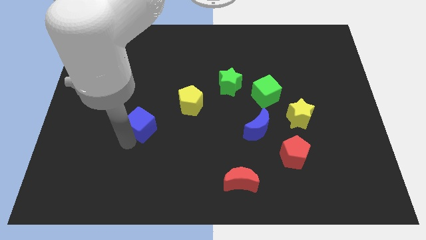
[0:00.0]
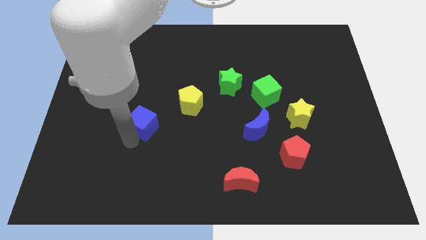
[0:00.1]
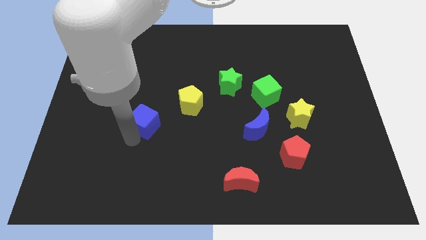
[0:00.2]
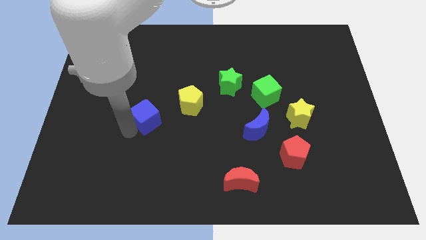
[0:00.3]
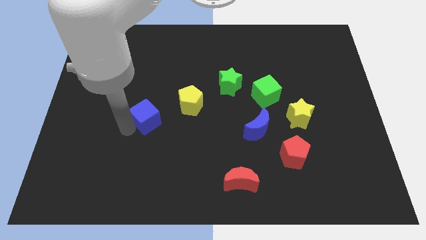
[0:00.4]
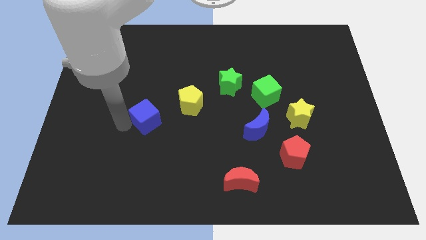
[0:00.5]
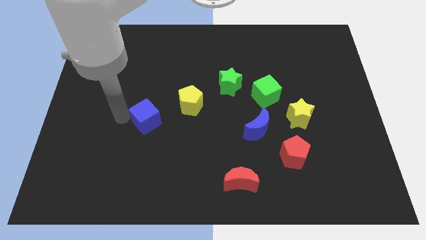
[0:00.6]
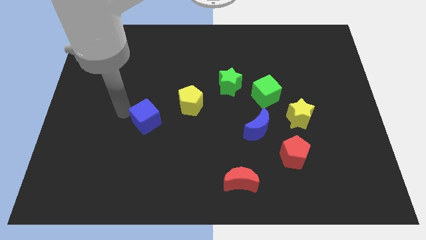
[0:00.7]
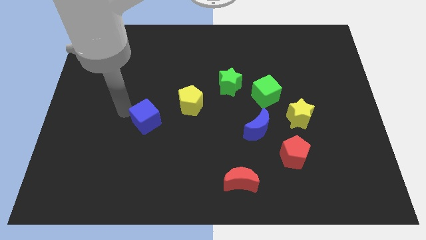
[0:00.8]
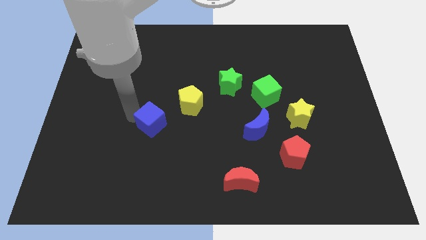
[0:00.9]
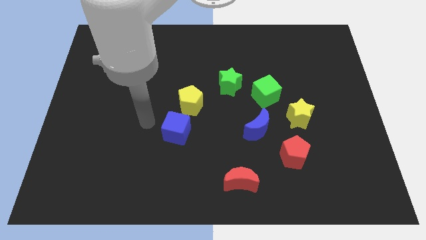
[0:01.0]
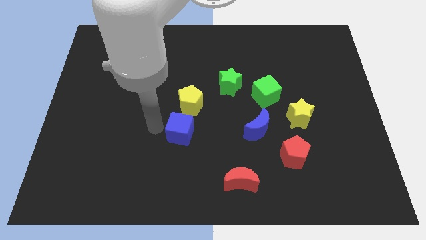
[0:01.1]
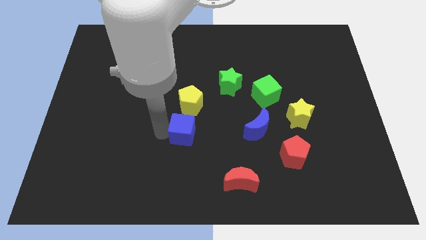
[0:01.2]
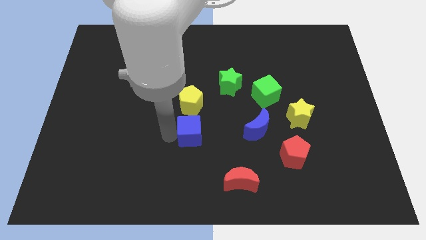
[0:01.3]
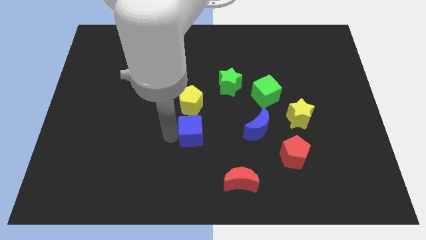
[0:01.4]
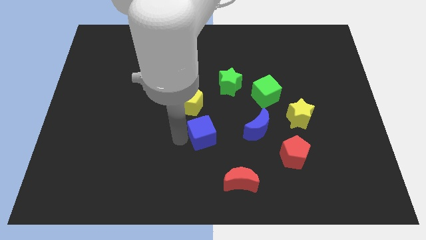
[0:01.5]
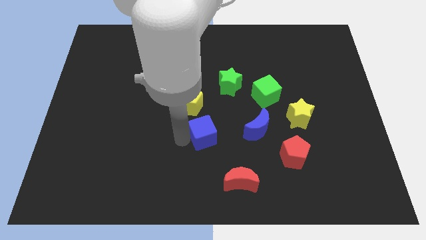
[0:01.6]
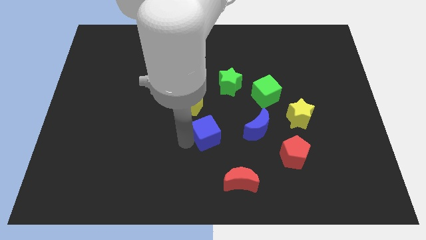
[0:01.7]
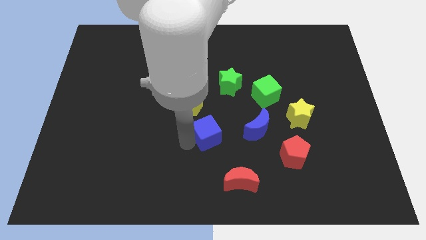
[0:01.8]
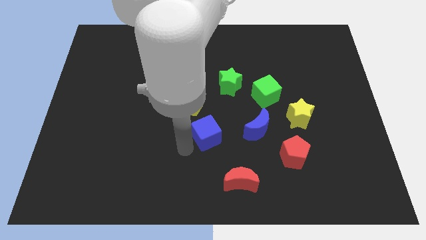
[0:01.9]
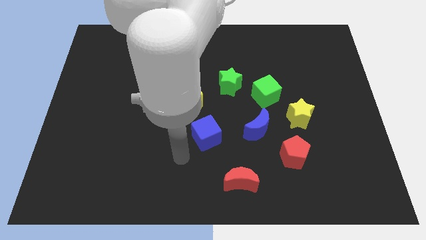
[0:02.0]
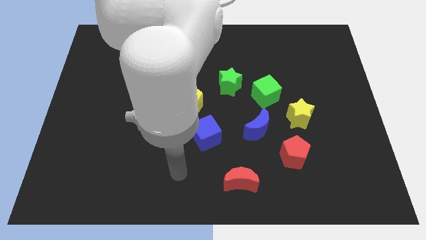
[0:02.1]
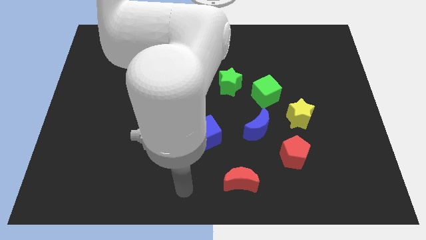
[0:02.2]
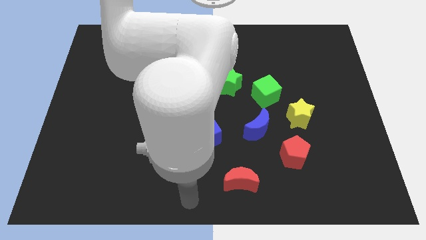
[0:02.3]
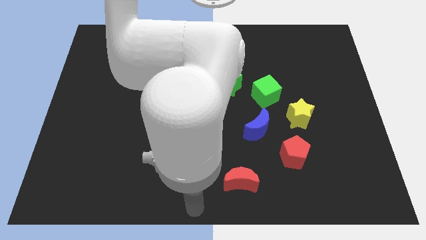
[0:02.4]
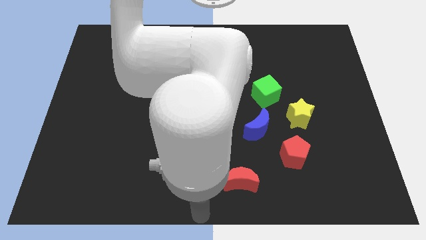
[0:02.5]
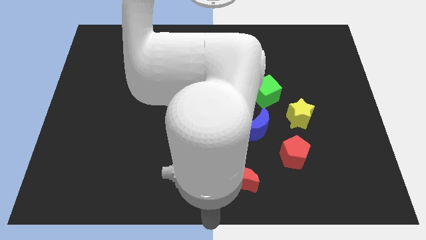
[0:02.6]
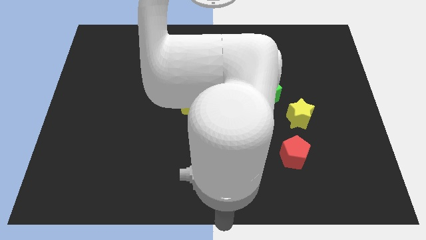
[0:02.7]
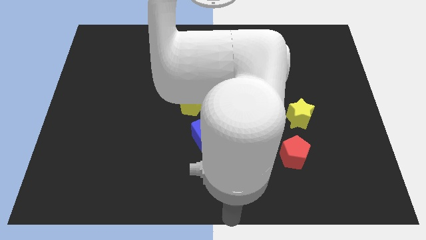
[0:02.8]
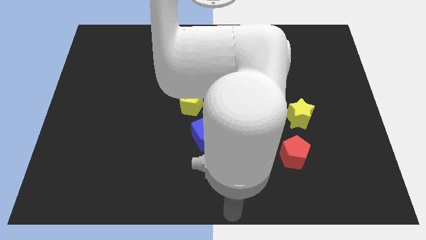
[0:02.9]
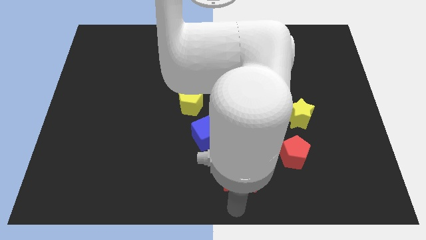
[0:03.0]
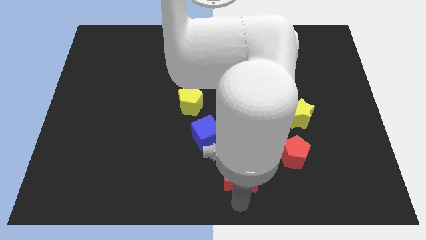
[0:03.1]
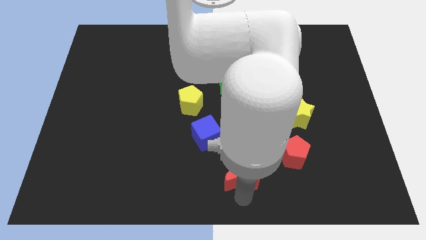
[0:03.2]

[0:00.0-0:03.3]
push the blue cube between the yellow pentagon and red moon

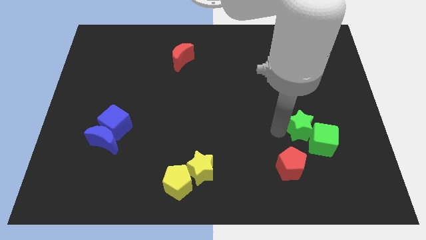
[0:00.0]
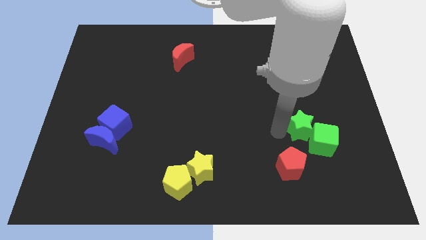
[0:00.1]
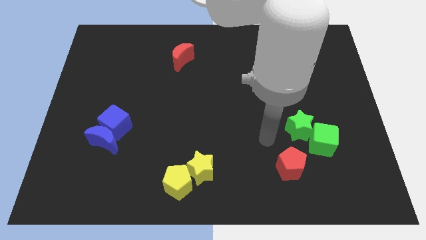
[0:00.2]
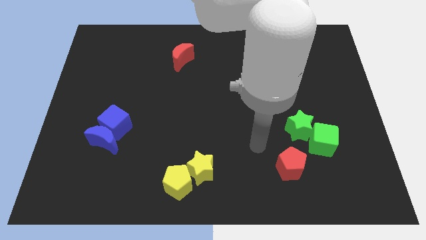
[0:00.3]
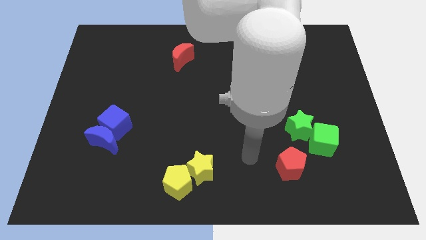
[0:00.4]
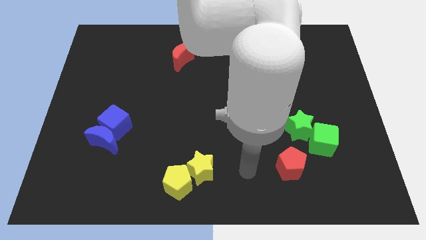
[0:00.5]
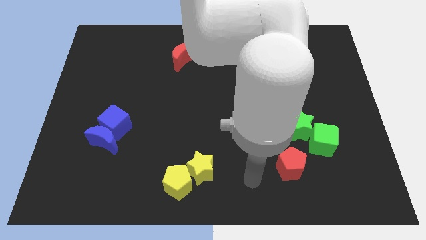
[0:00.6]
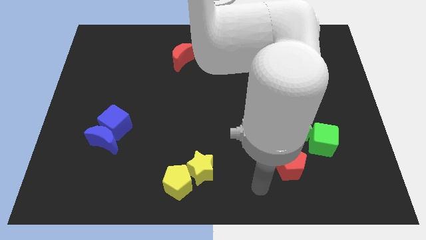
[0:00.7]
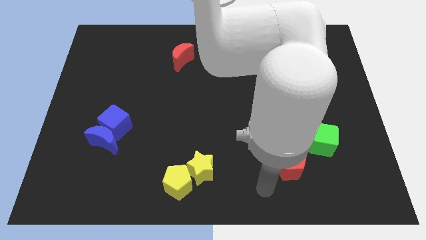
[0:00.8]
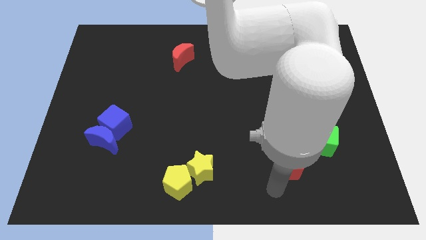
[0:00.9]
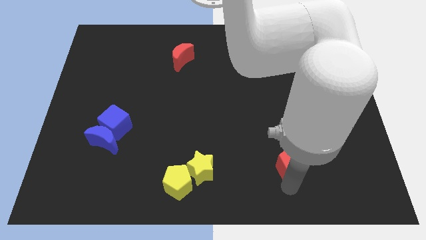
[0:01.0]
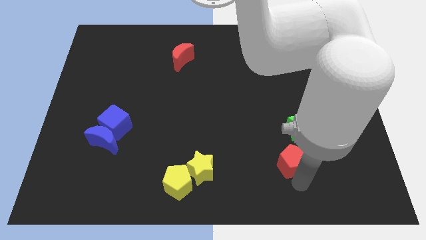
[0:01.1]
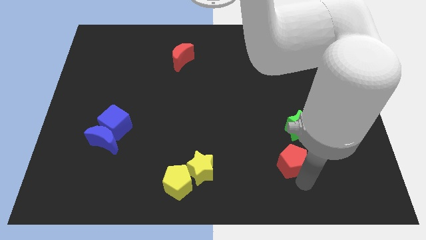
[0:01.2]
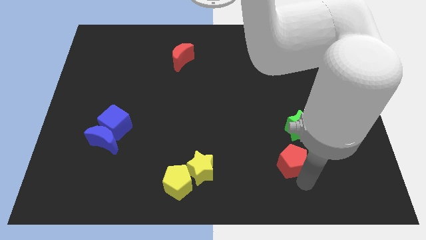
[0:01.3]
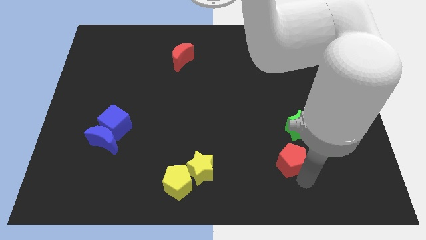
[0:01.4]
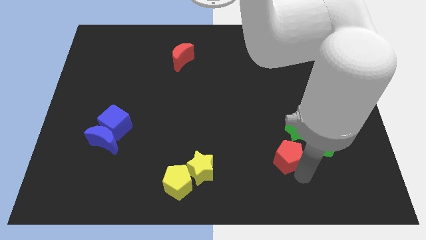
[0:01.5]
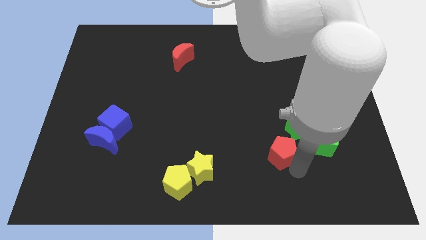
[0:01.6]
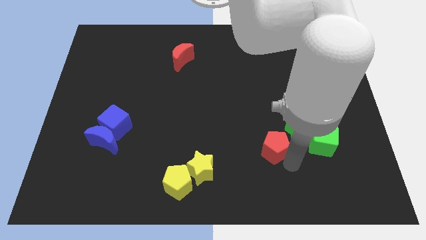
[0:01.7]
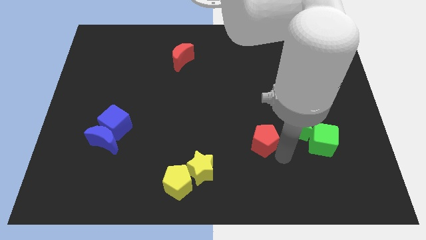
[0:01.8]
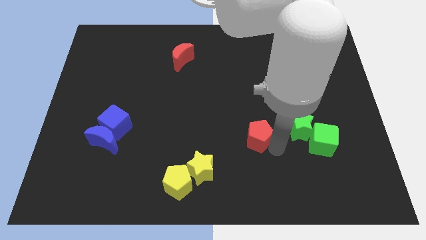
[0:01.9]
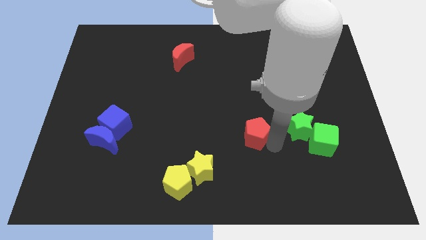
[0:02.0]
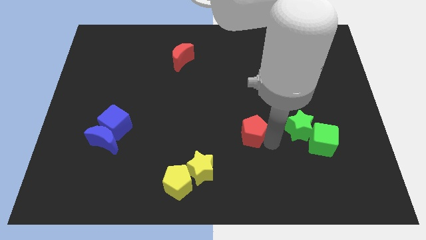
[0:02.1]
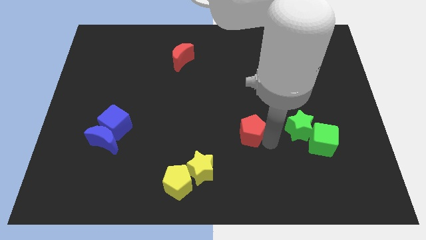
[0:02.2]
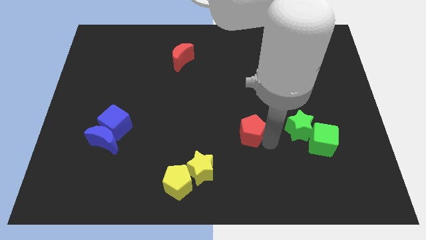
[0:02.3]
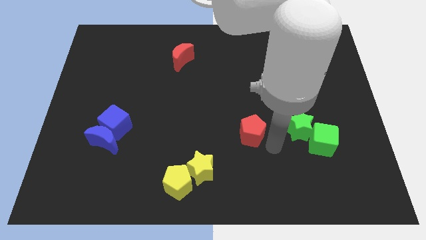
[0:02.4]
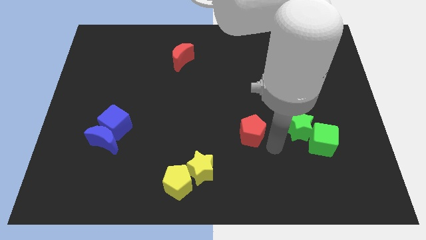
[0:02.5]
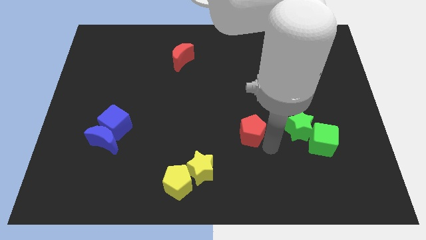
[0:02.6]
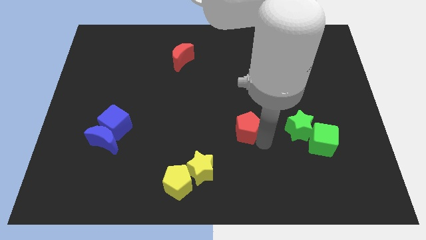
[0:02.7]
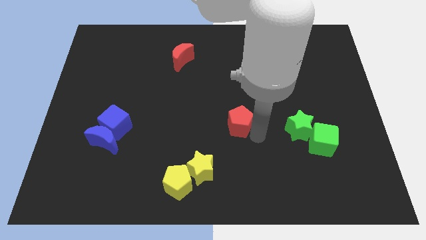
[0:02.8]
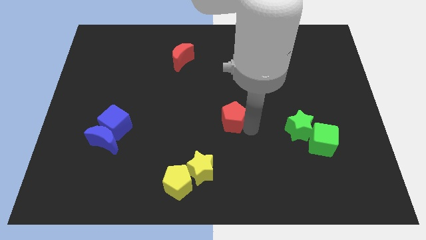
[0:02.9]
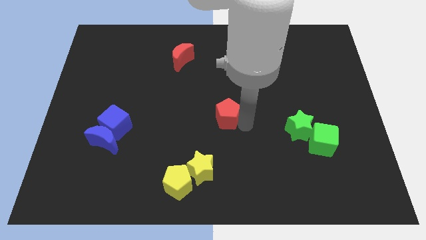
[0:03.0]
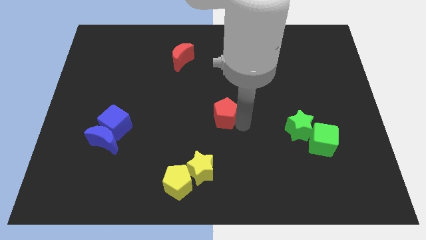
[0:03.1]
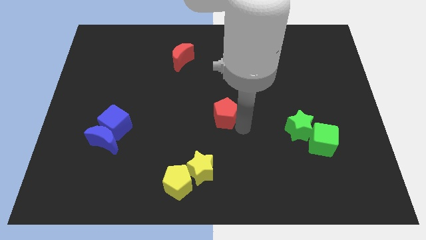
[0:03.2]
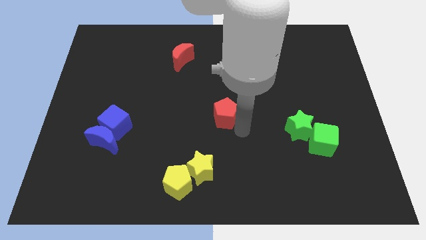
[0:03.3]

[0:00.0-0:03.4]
place the red pentagon at the center of the board

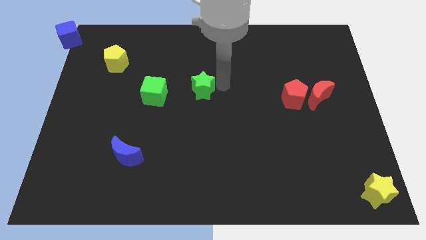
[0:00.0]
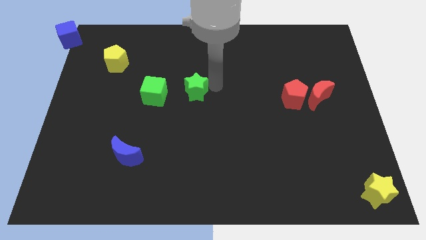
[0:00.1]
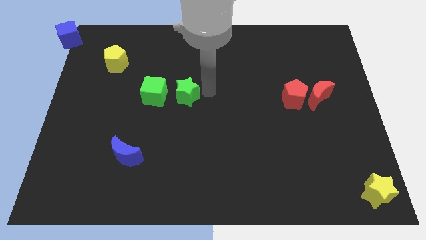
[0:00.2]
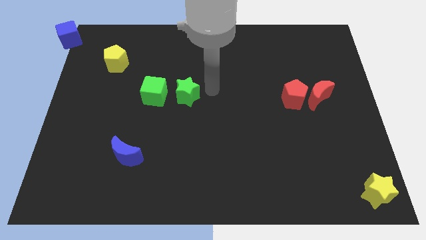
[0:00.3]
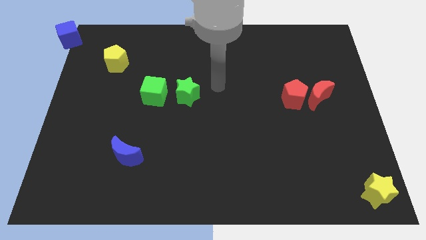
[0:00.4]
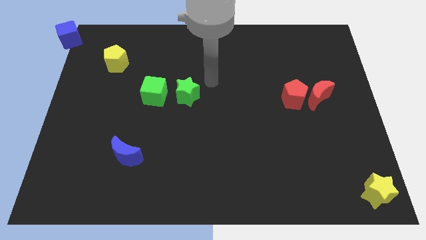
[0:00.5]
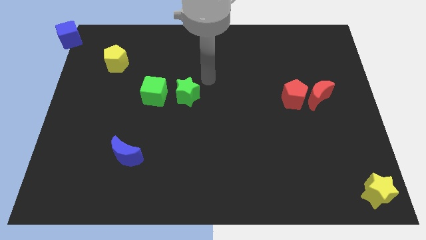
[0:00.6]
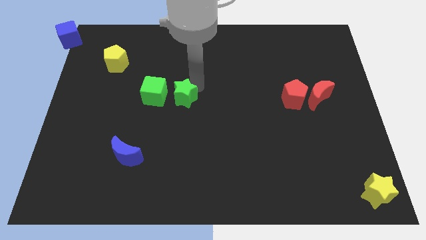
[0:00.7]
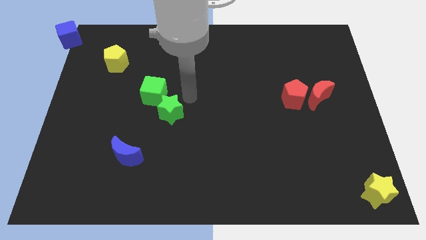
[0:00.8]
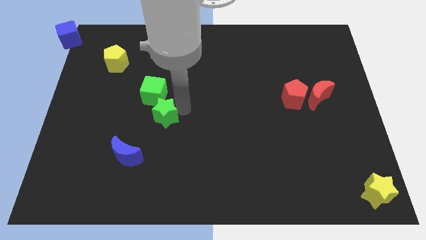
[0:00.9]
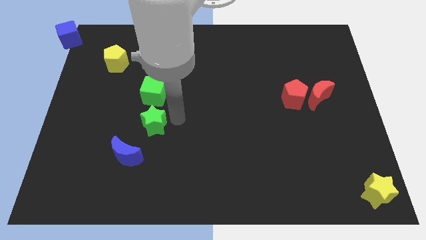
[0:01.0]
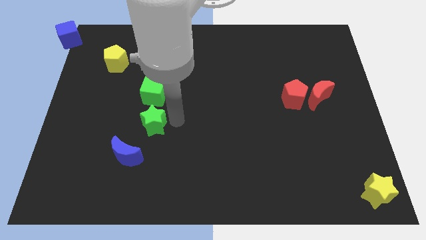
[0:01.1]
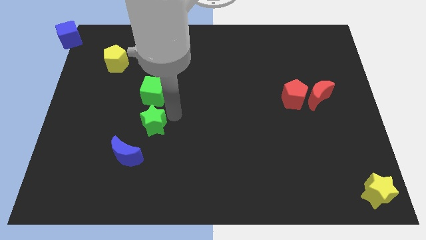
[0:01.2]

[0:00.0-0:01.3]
place the green star below the green cube

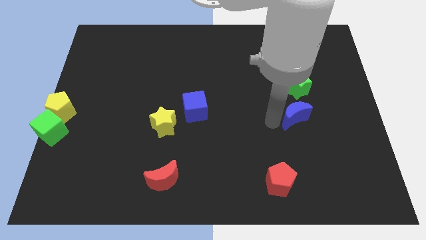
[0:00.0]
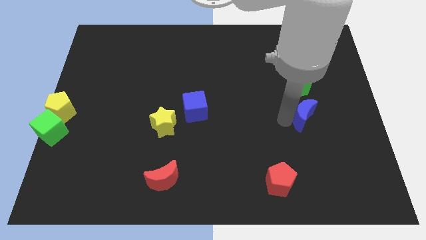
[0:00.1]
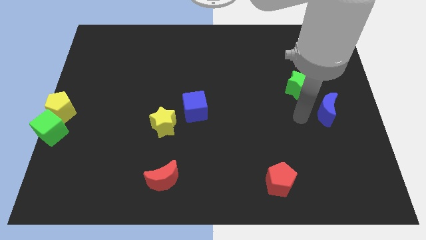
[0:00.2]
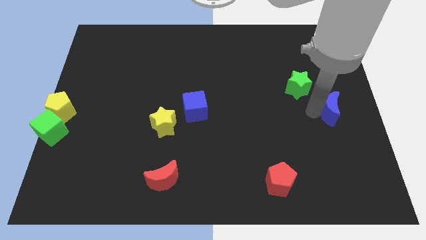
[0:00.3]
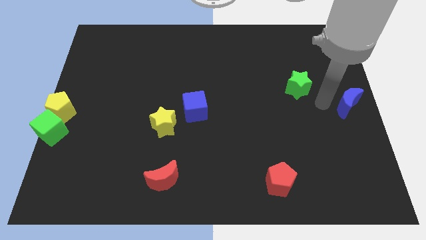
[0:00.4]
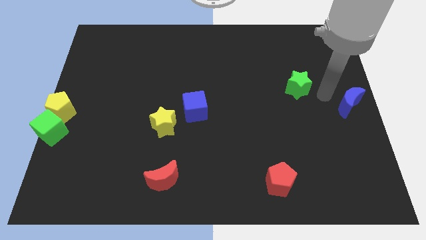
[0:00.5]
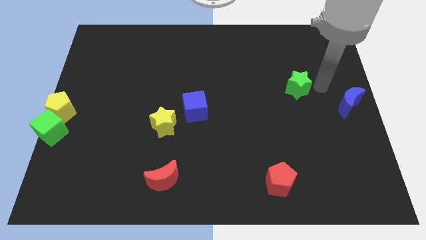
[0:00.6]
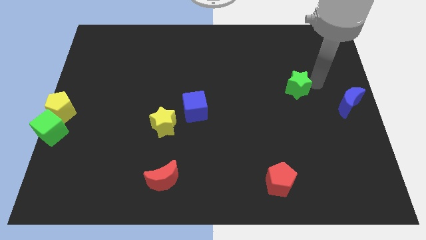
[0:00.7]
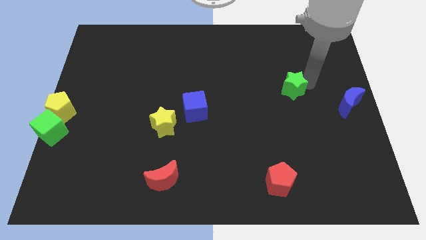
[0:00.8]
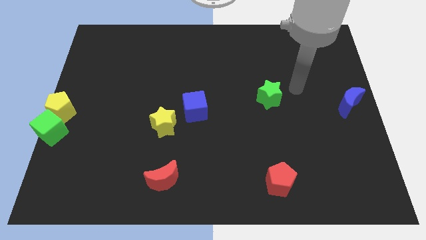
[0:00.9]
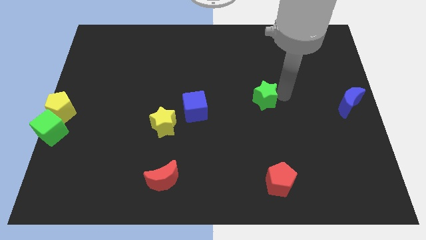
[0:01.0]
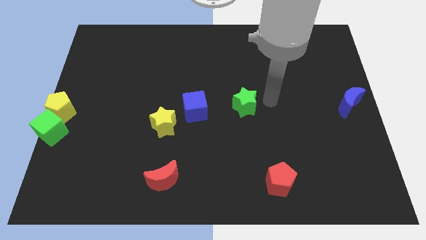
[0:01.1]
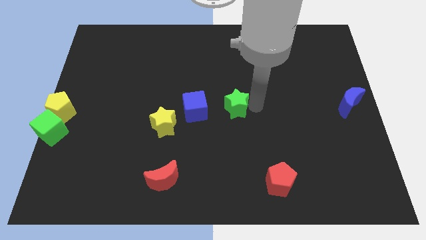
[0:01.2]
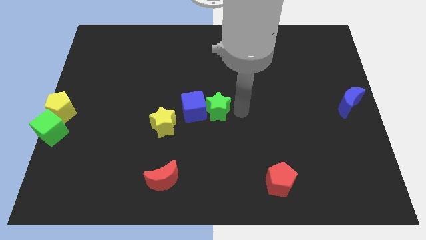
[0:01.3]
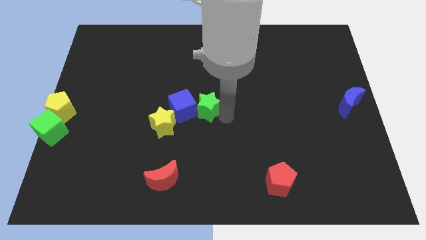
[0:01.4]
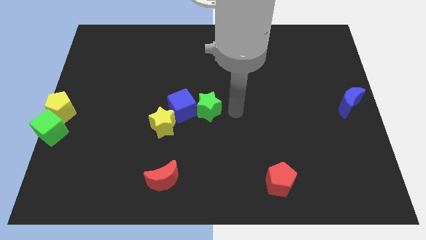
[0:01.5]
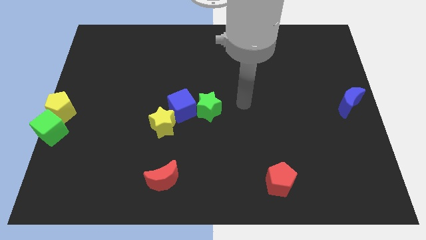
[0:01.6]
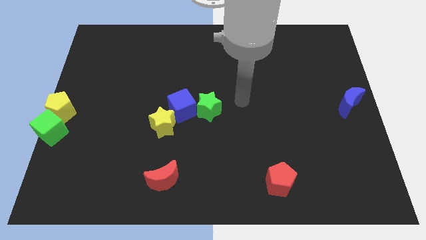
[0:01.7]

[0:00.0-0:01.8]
push the green star towards the right side of the blue cube
